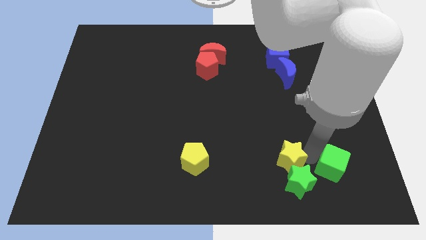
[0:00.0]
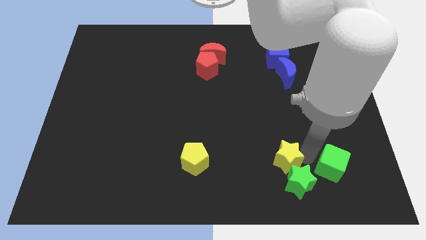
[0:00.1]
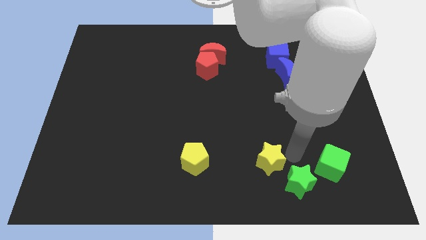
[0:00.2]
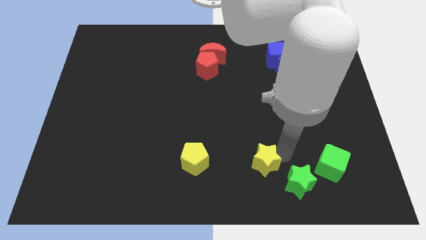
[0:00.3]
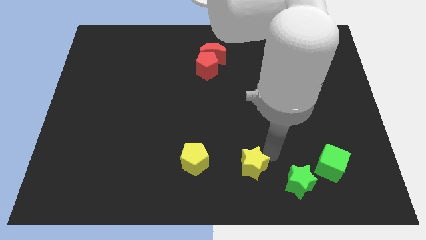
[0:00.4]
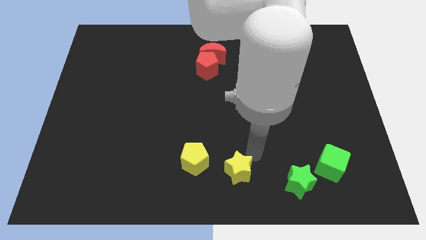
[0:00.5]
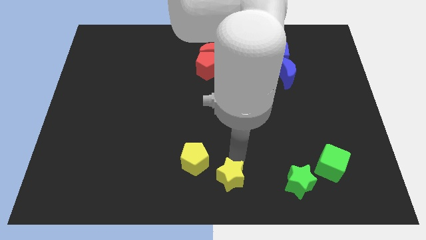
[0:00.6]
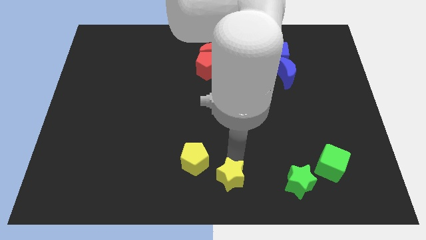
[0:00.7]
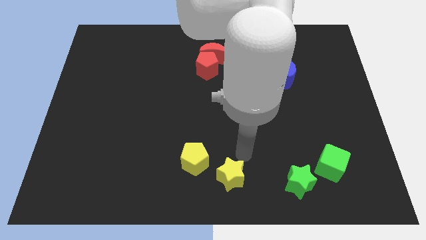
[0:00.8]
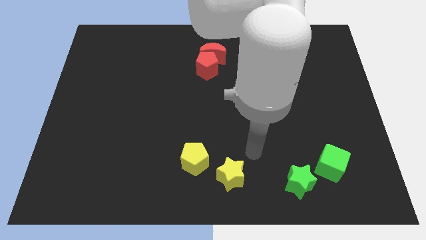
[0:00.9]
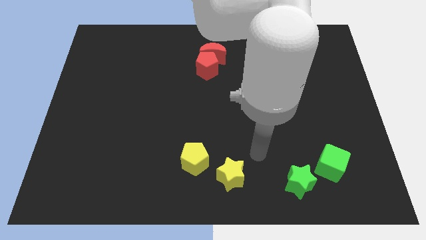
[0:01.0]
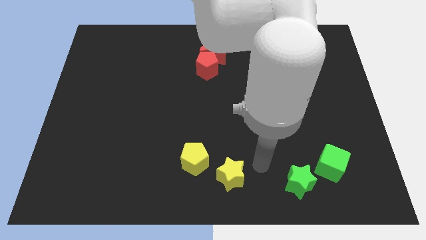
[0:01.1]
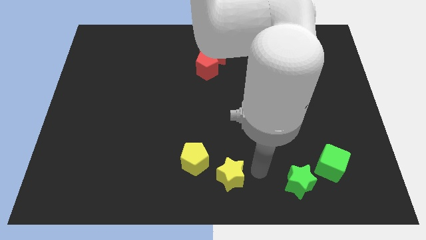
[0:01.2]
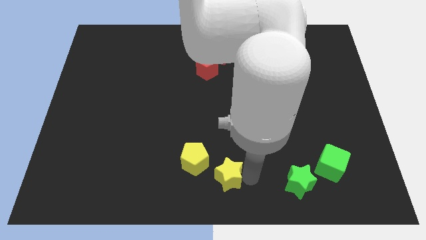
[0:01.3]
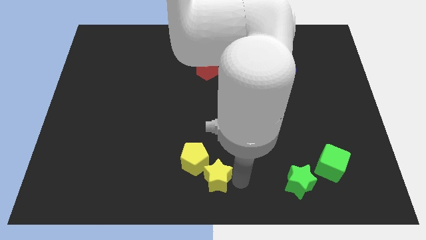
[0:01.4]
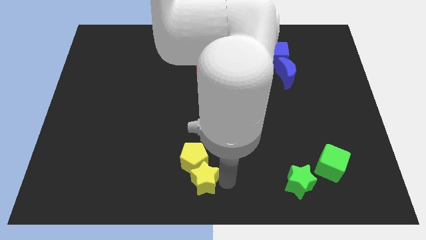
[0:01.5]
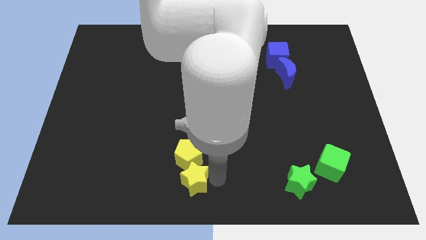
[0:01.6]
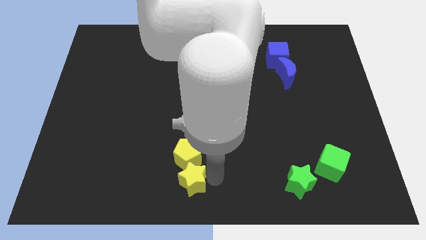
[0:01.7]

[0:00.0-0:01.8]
slide the yellow star into the bottom side of the yellow pentagon

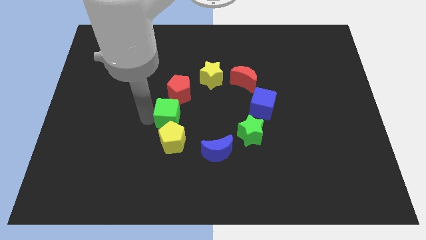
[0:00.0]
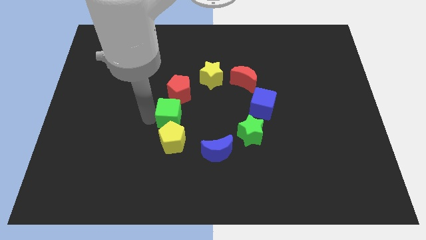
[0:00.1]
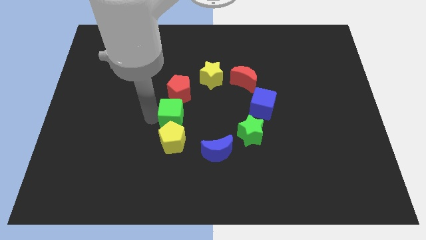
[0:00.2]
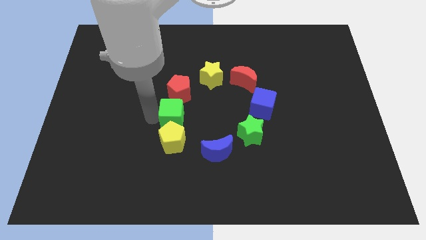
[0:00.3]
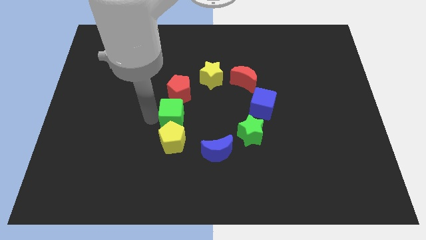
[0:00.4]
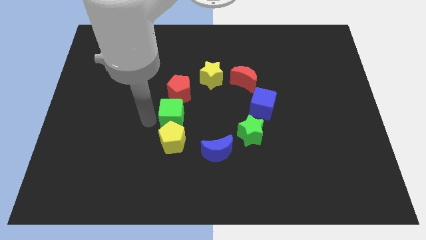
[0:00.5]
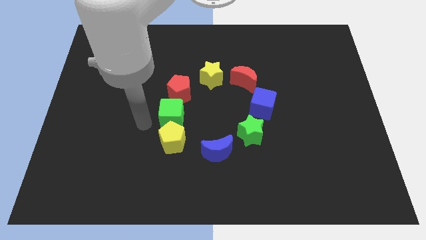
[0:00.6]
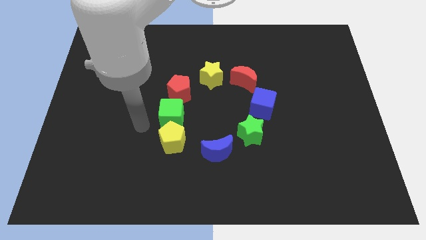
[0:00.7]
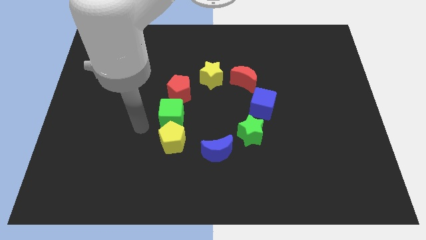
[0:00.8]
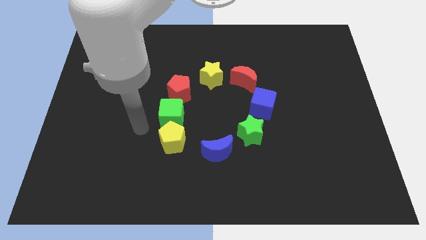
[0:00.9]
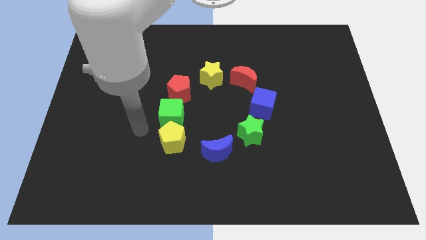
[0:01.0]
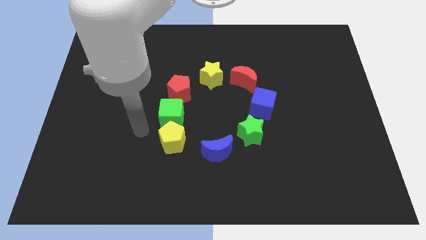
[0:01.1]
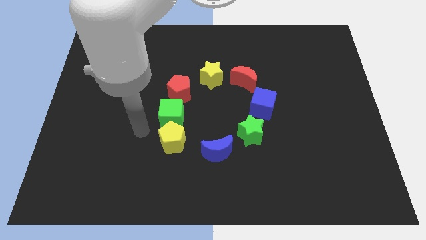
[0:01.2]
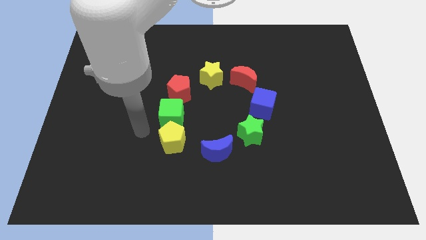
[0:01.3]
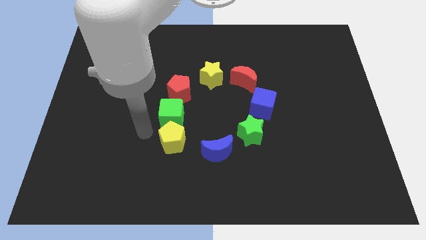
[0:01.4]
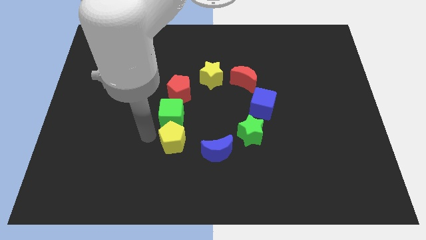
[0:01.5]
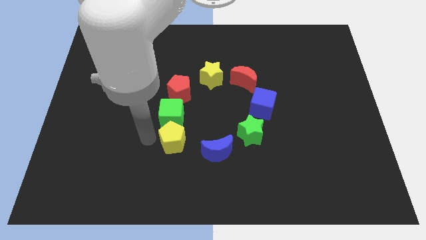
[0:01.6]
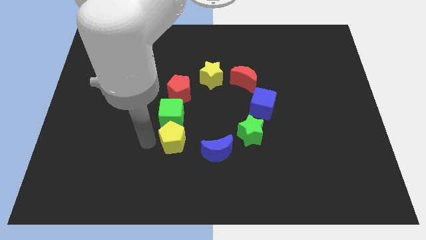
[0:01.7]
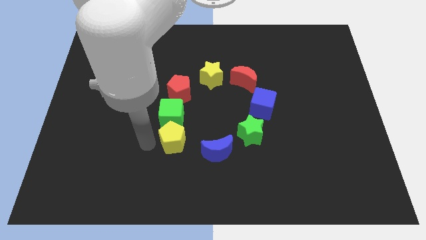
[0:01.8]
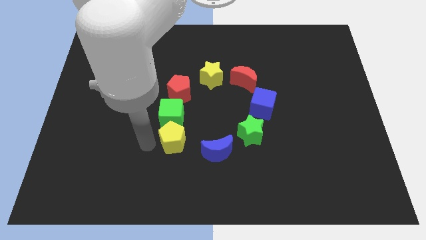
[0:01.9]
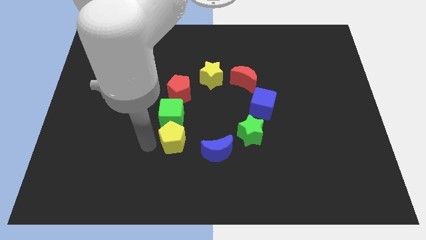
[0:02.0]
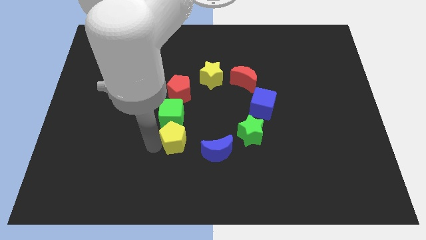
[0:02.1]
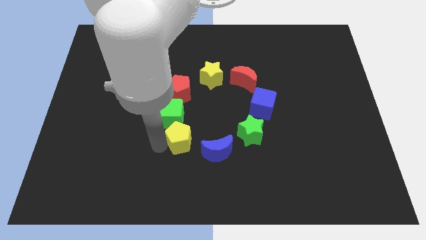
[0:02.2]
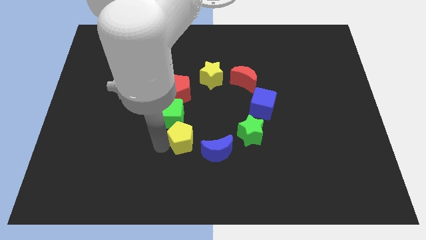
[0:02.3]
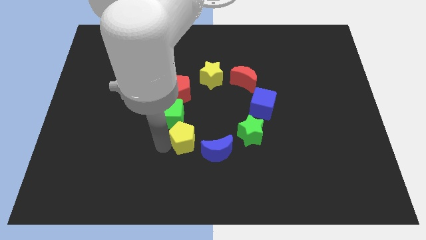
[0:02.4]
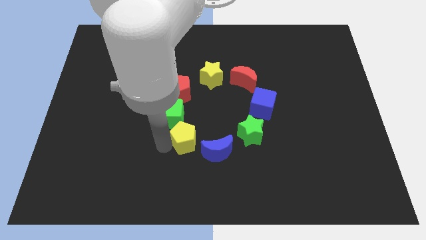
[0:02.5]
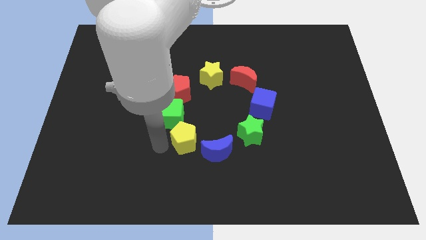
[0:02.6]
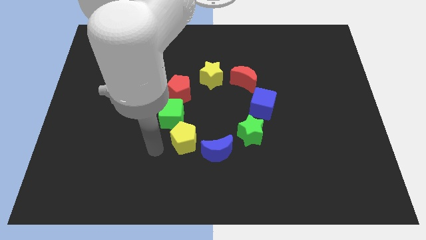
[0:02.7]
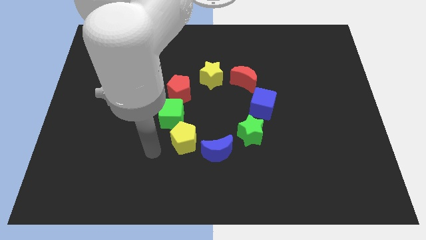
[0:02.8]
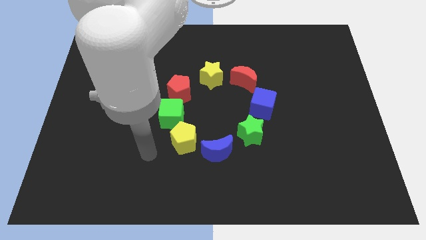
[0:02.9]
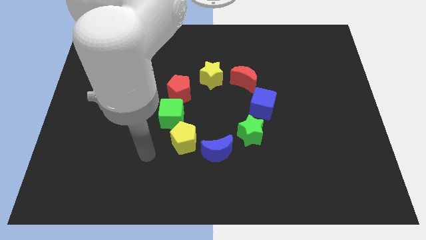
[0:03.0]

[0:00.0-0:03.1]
slight push the yellow pentagon to the right

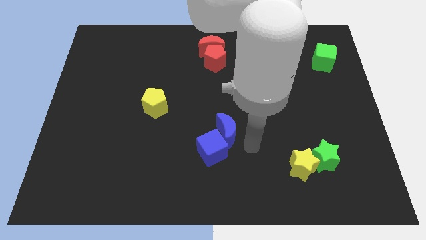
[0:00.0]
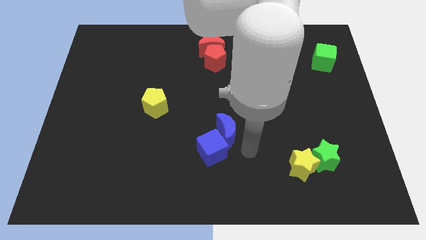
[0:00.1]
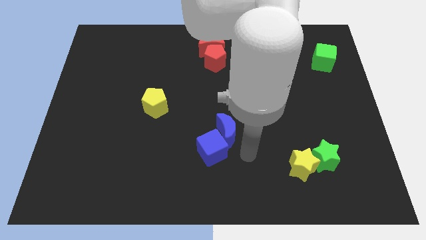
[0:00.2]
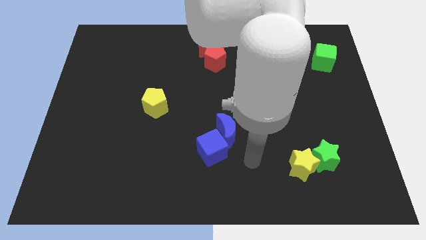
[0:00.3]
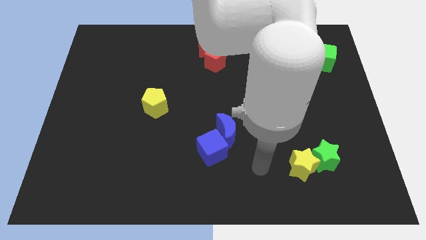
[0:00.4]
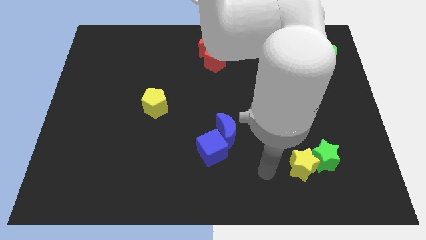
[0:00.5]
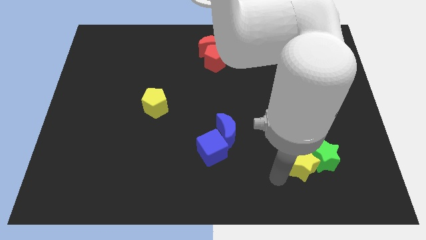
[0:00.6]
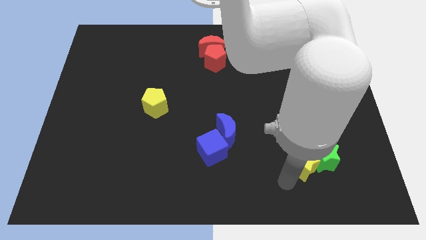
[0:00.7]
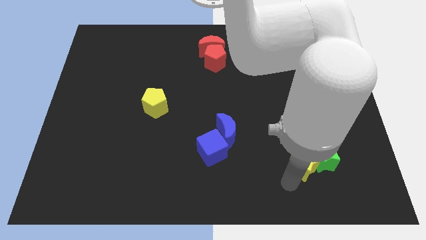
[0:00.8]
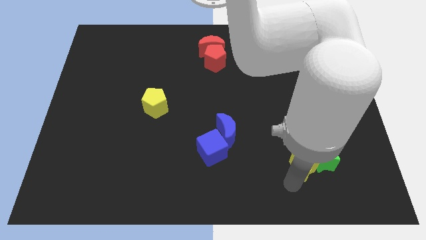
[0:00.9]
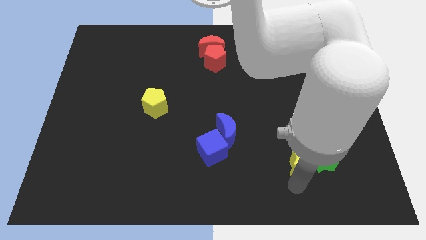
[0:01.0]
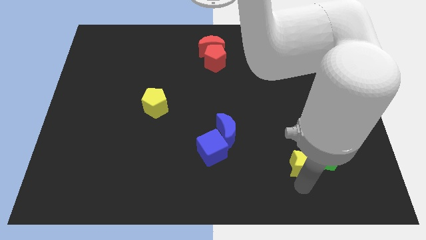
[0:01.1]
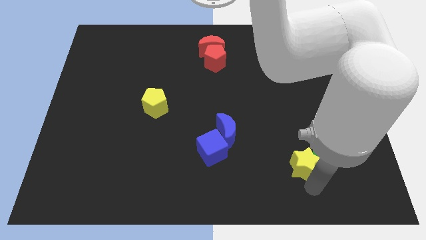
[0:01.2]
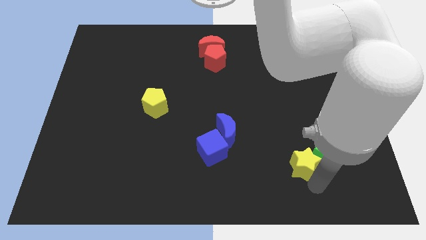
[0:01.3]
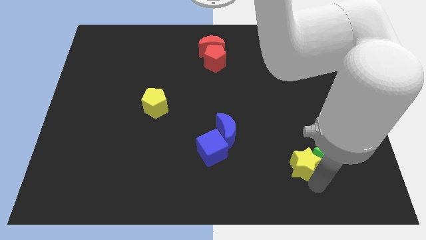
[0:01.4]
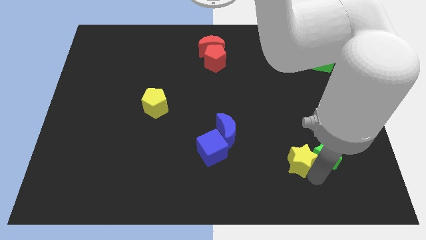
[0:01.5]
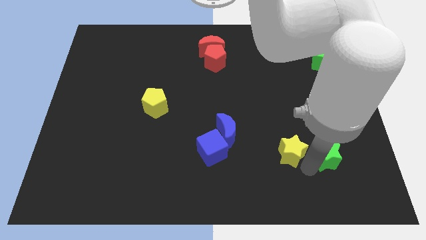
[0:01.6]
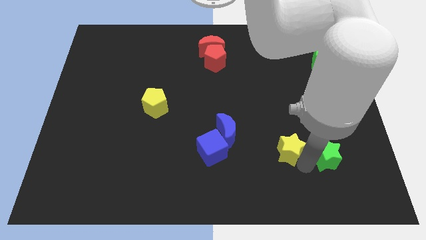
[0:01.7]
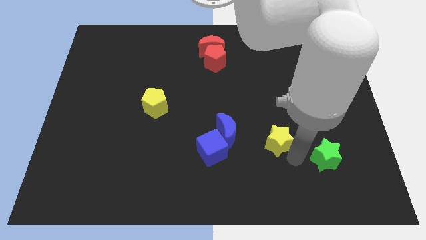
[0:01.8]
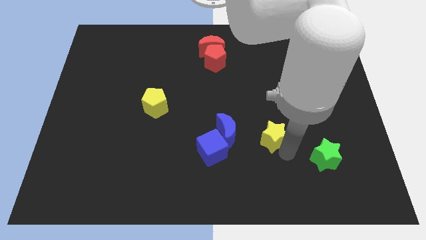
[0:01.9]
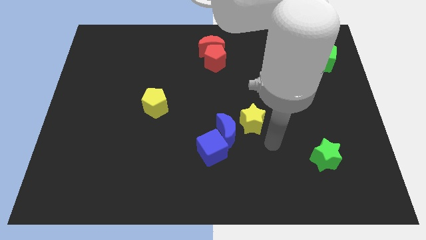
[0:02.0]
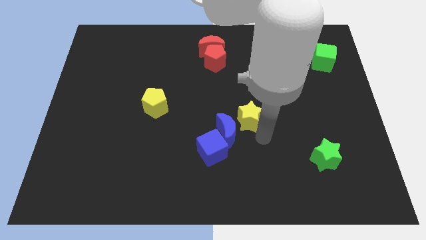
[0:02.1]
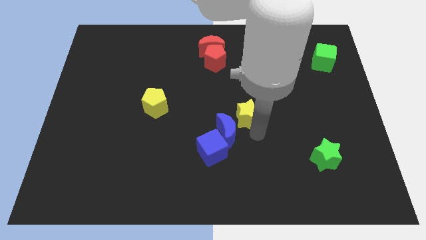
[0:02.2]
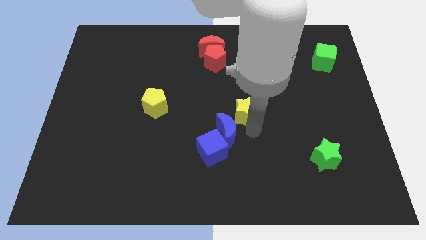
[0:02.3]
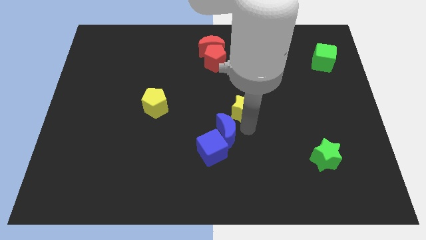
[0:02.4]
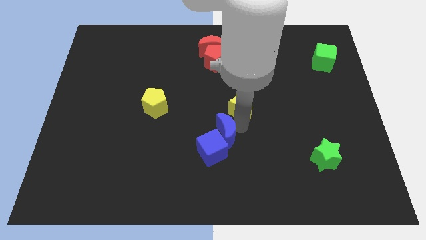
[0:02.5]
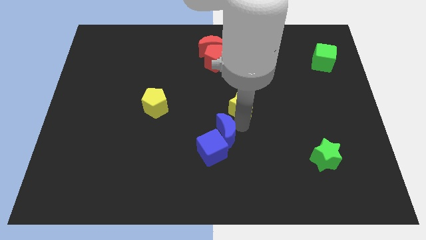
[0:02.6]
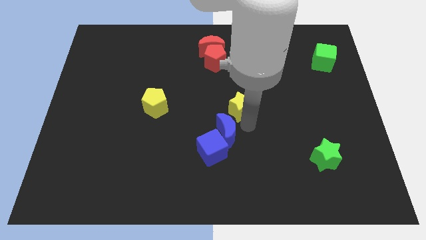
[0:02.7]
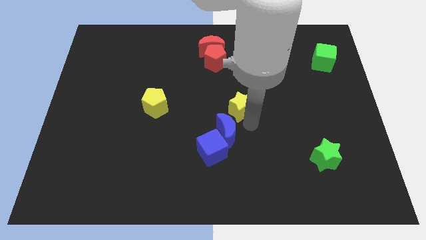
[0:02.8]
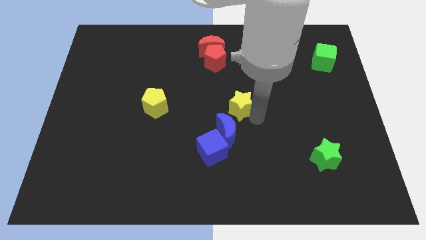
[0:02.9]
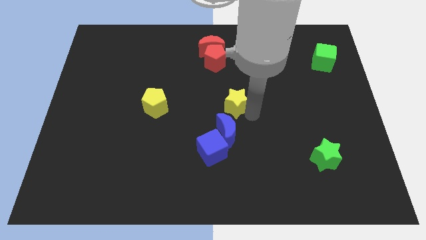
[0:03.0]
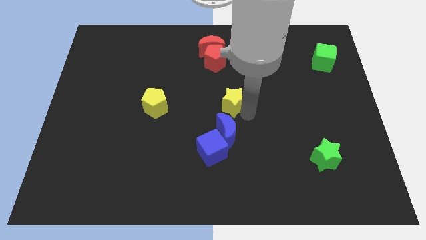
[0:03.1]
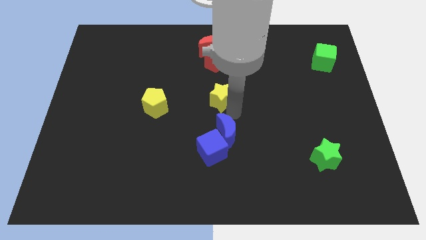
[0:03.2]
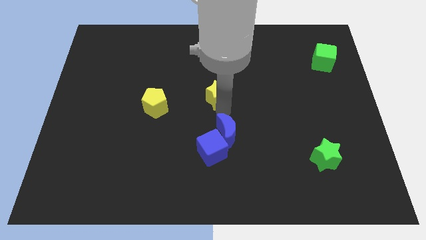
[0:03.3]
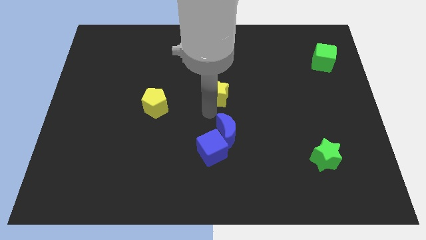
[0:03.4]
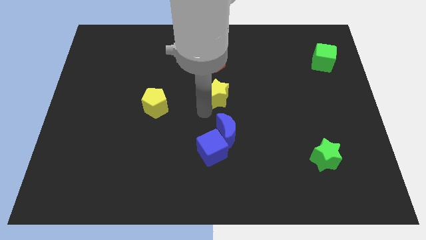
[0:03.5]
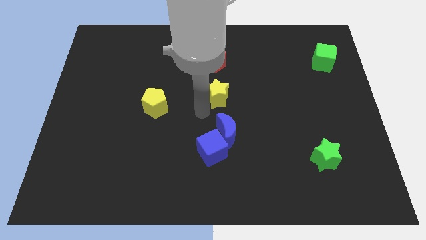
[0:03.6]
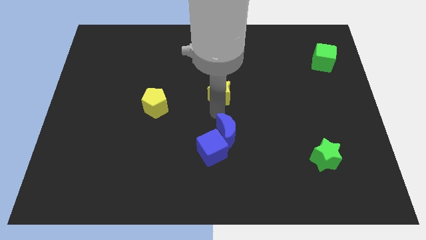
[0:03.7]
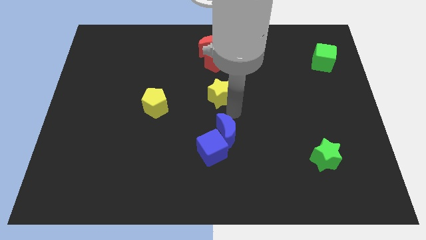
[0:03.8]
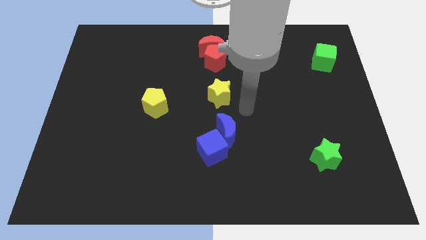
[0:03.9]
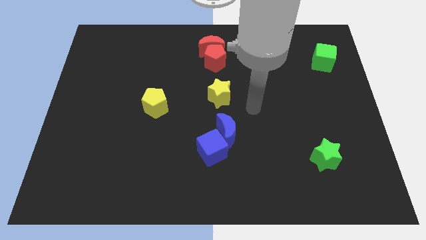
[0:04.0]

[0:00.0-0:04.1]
place yellow star in the center
